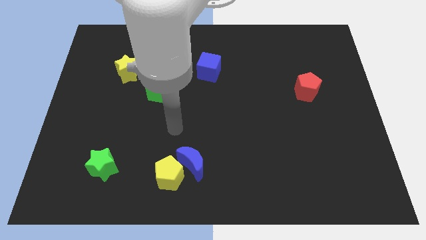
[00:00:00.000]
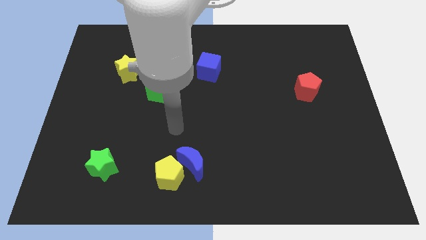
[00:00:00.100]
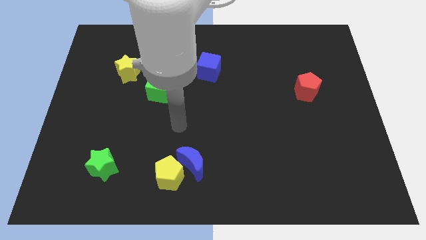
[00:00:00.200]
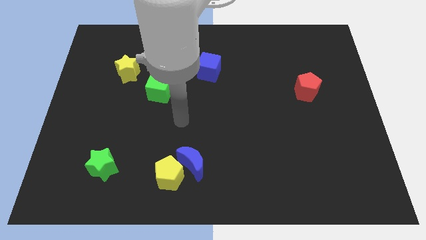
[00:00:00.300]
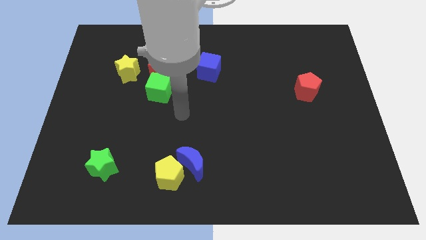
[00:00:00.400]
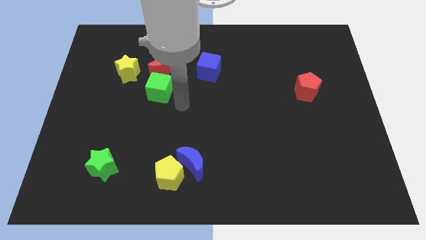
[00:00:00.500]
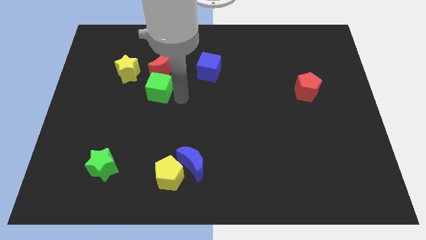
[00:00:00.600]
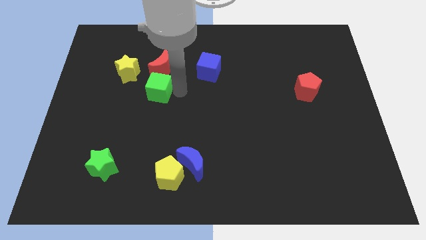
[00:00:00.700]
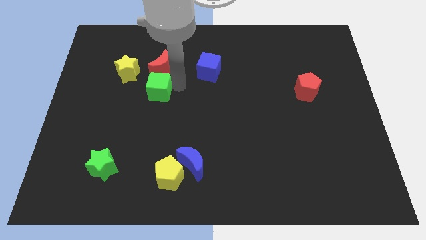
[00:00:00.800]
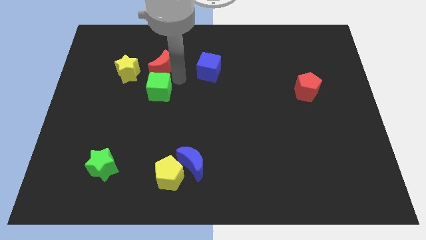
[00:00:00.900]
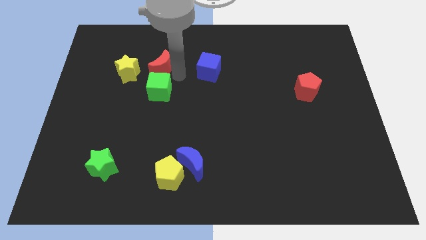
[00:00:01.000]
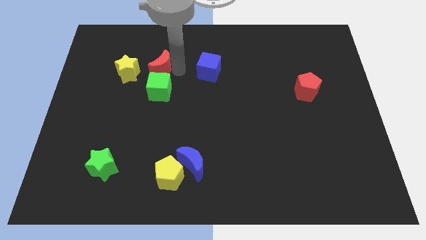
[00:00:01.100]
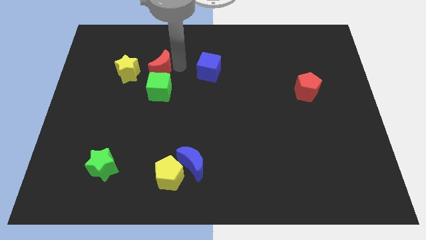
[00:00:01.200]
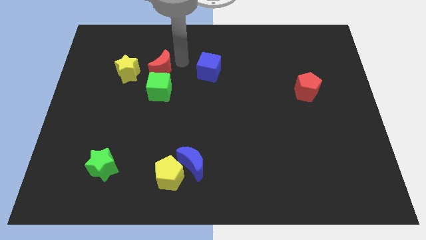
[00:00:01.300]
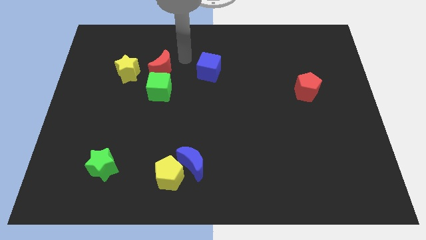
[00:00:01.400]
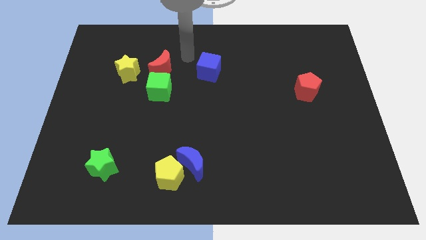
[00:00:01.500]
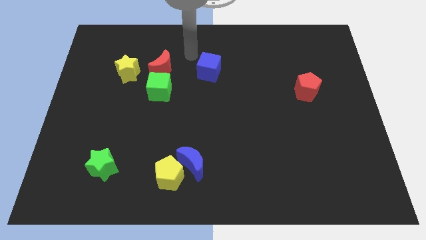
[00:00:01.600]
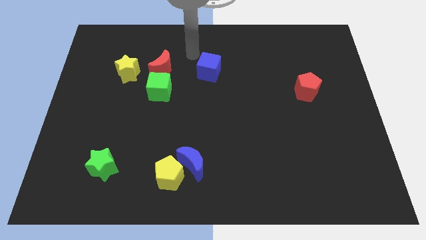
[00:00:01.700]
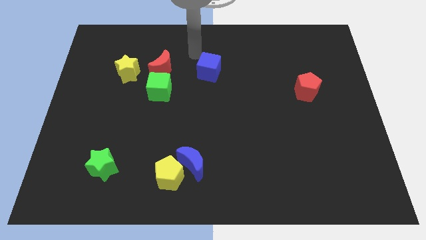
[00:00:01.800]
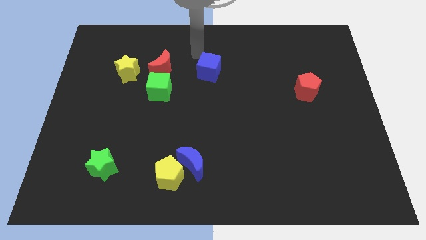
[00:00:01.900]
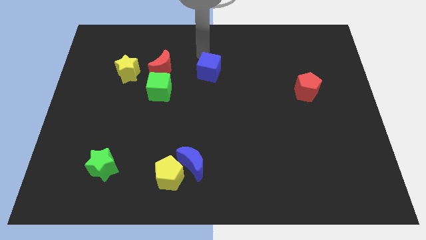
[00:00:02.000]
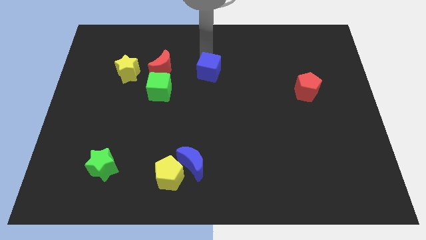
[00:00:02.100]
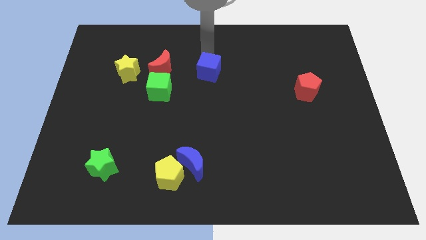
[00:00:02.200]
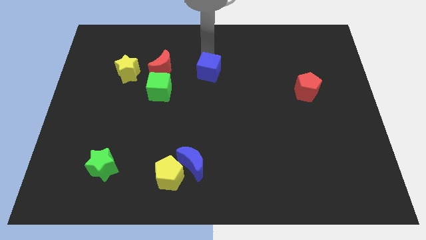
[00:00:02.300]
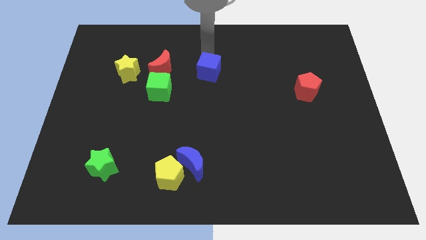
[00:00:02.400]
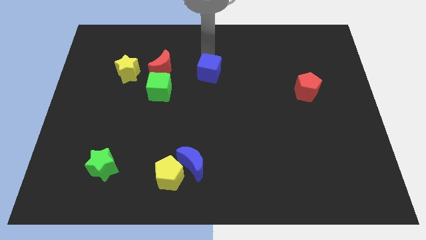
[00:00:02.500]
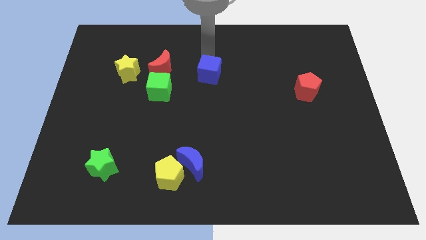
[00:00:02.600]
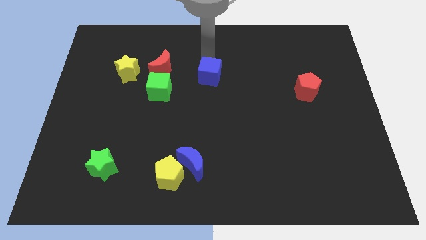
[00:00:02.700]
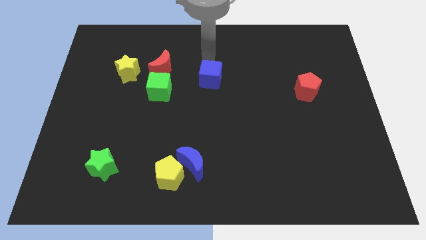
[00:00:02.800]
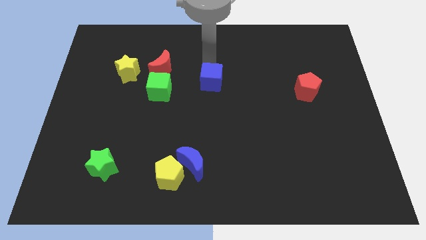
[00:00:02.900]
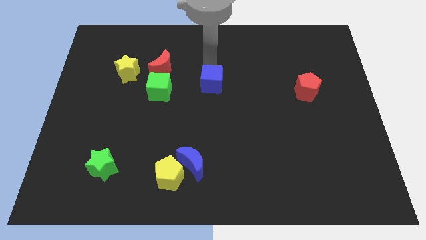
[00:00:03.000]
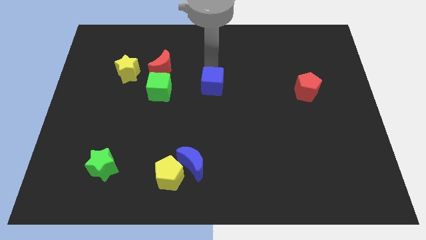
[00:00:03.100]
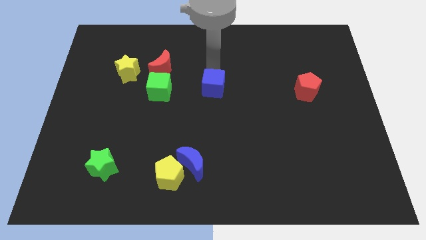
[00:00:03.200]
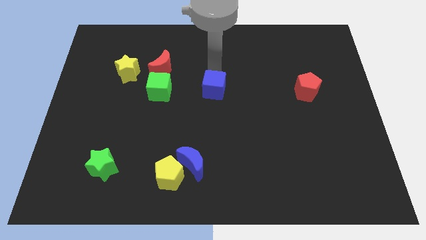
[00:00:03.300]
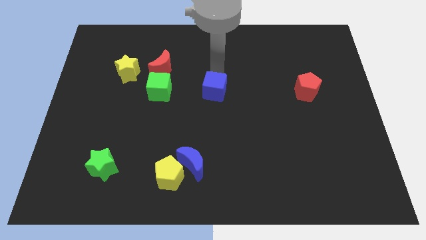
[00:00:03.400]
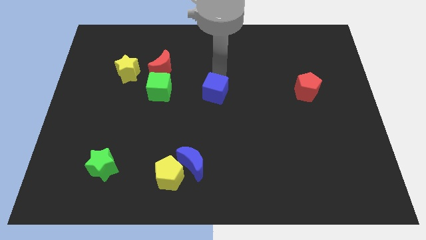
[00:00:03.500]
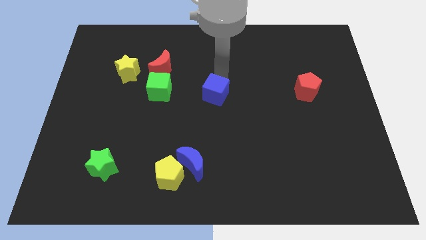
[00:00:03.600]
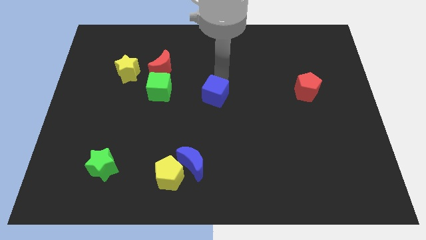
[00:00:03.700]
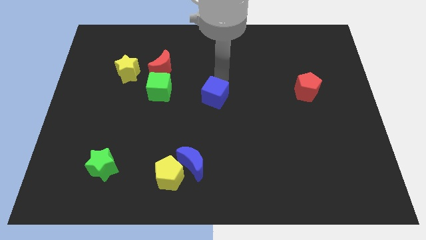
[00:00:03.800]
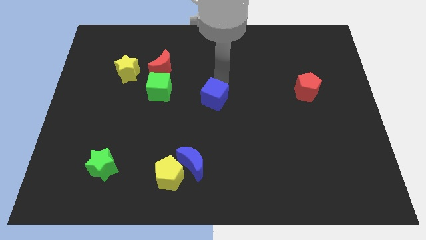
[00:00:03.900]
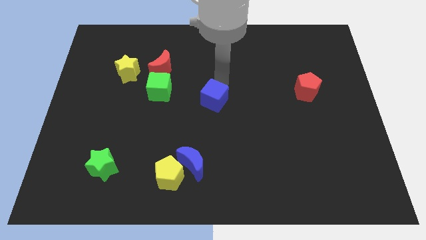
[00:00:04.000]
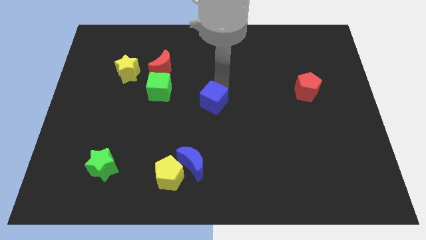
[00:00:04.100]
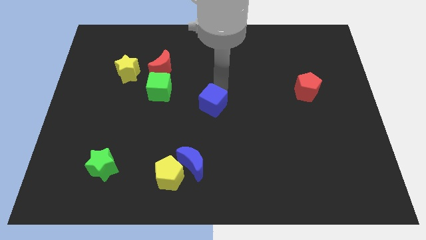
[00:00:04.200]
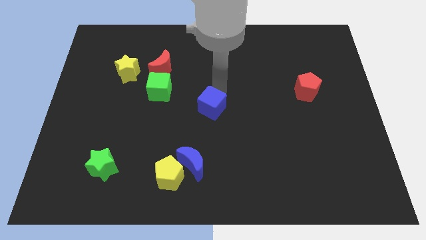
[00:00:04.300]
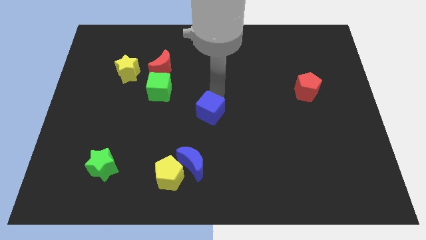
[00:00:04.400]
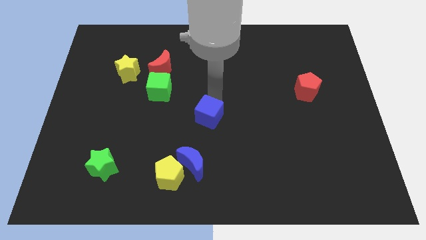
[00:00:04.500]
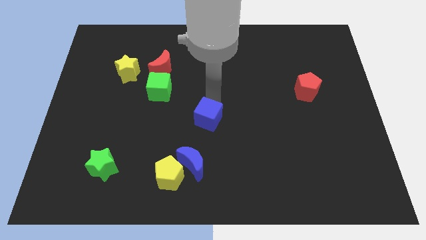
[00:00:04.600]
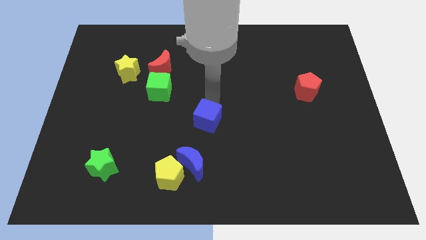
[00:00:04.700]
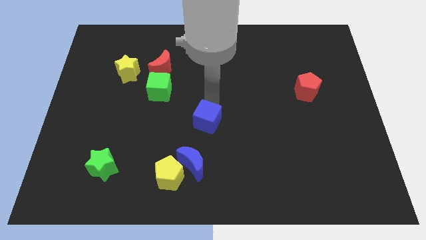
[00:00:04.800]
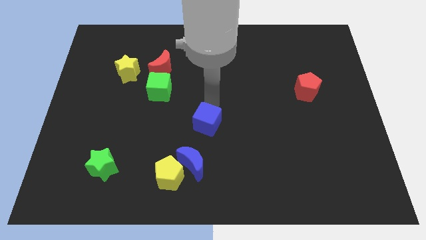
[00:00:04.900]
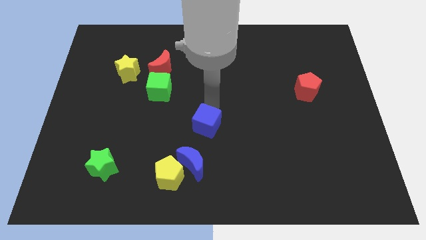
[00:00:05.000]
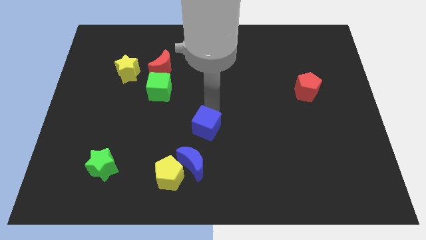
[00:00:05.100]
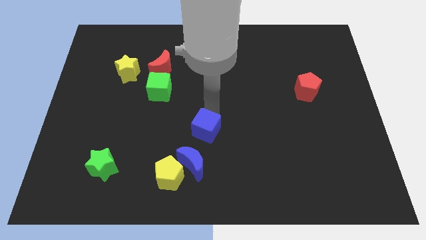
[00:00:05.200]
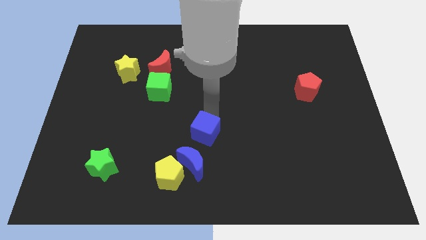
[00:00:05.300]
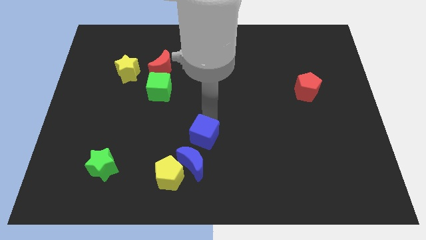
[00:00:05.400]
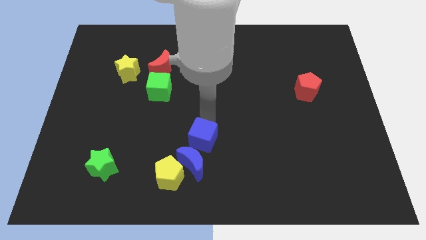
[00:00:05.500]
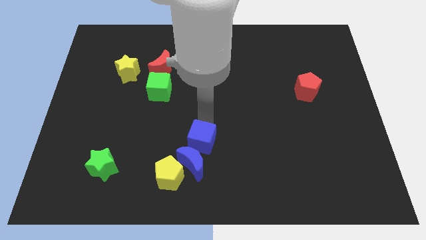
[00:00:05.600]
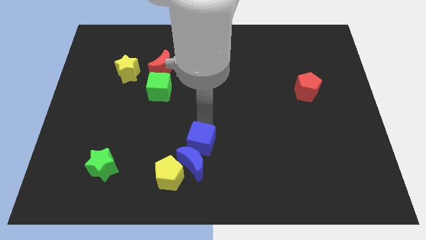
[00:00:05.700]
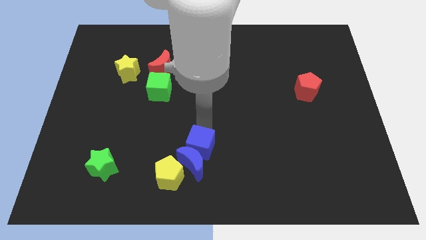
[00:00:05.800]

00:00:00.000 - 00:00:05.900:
move the blue cube close to the blue moon

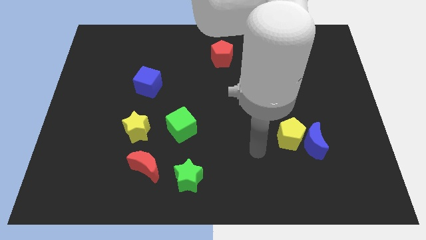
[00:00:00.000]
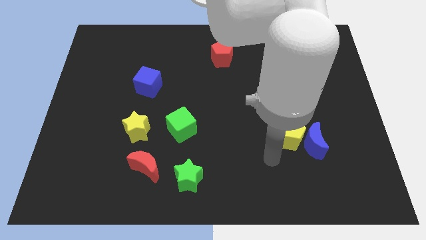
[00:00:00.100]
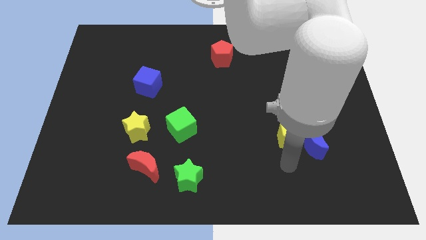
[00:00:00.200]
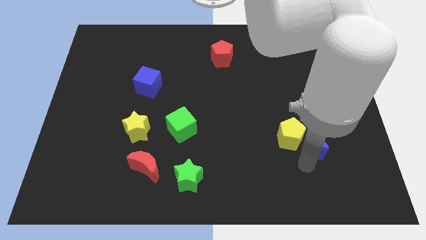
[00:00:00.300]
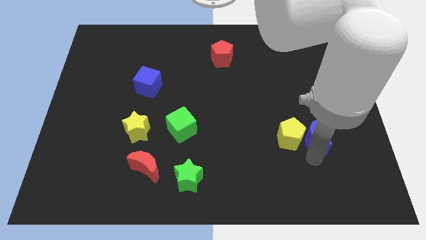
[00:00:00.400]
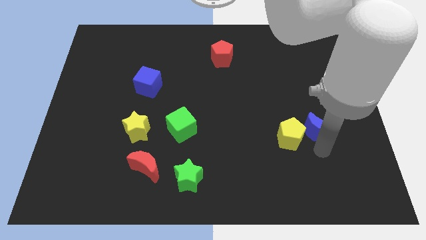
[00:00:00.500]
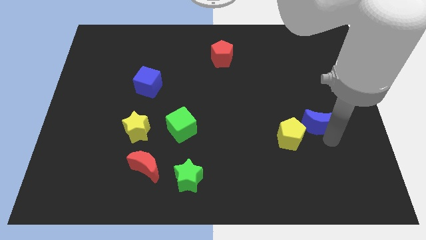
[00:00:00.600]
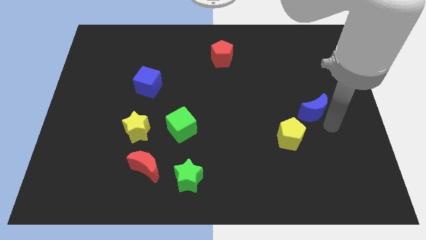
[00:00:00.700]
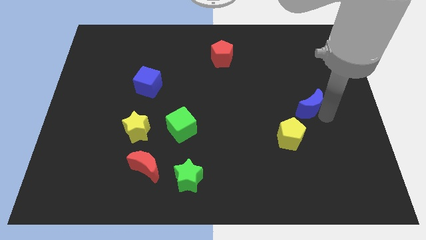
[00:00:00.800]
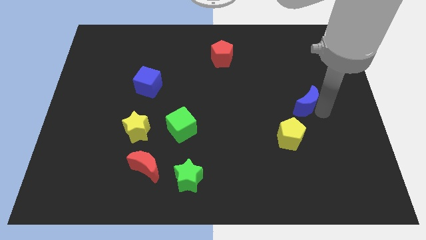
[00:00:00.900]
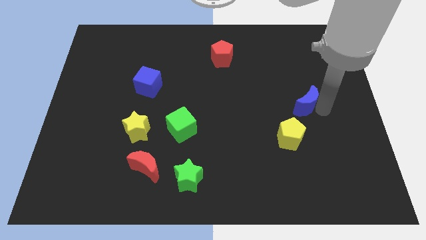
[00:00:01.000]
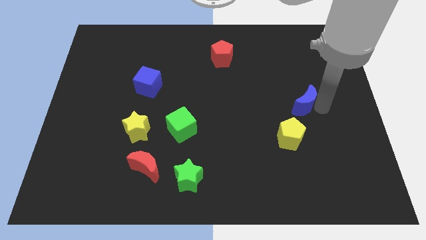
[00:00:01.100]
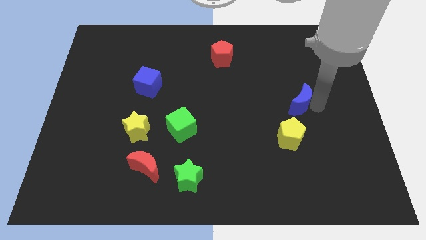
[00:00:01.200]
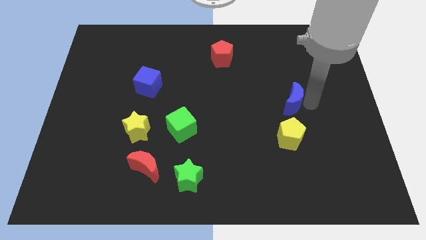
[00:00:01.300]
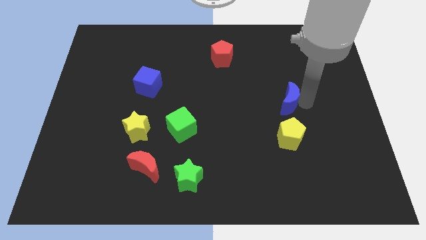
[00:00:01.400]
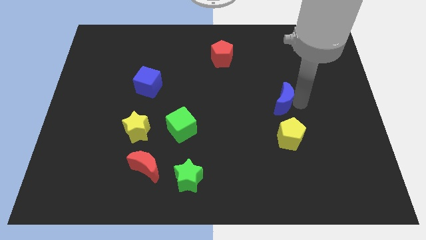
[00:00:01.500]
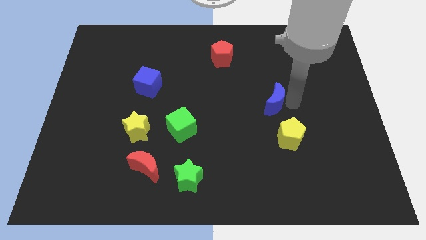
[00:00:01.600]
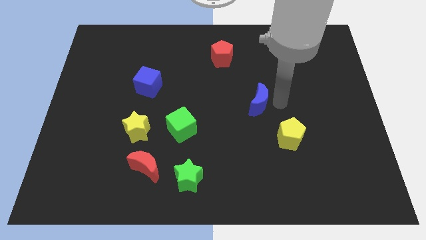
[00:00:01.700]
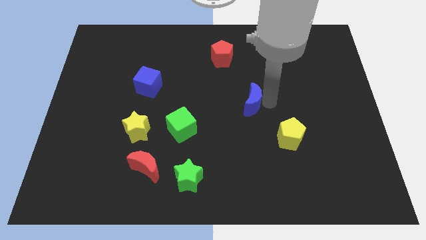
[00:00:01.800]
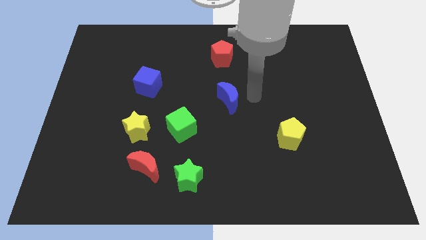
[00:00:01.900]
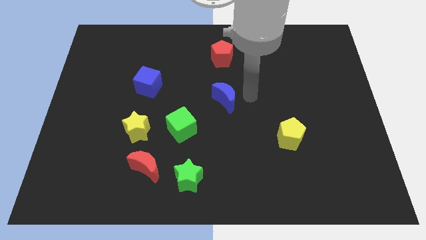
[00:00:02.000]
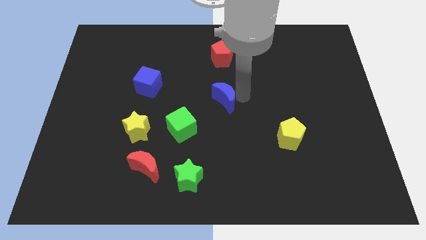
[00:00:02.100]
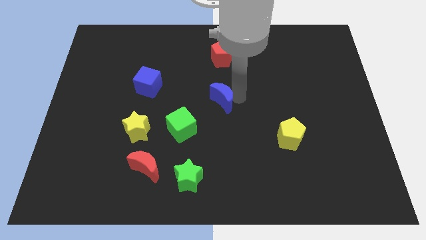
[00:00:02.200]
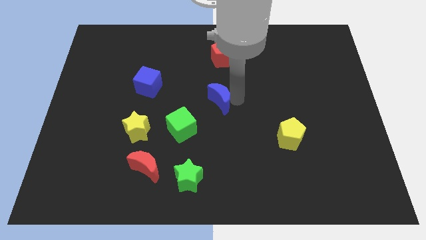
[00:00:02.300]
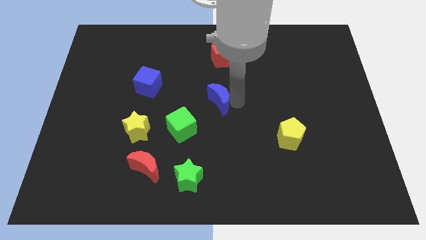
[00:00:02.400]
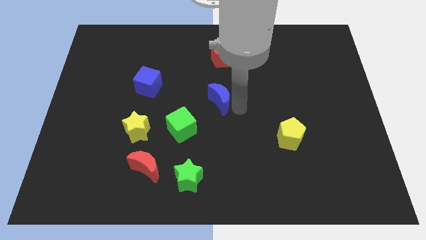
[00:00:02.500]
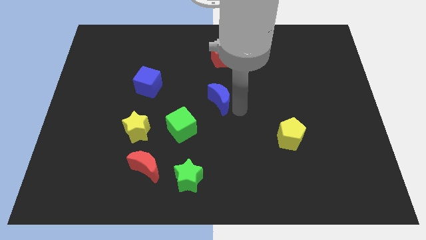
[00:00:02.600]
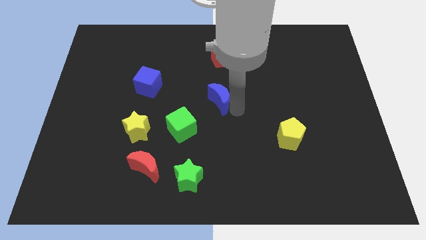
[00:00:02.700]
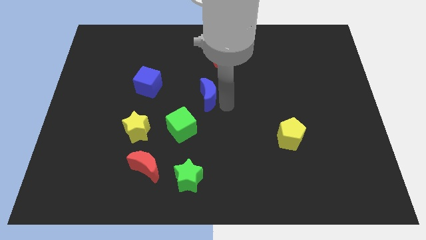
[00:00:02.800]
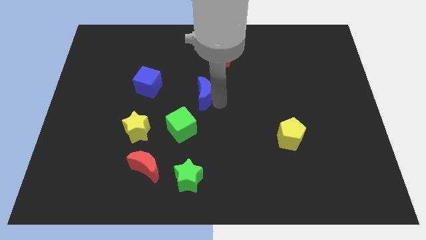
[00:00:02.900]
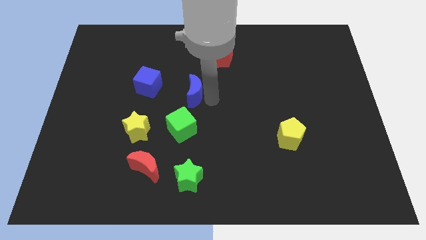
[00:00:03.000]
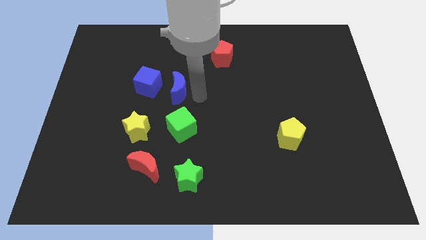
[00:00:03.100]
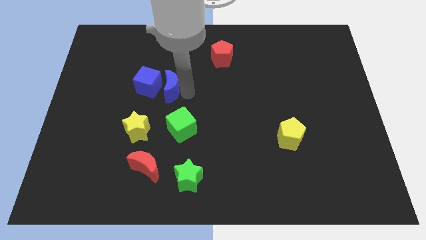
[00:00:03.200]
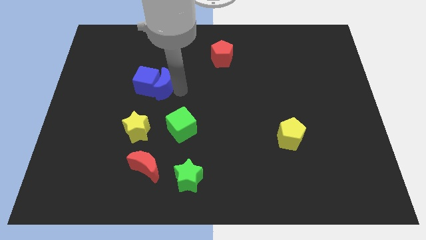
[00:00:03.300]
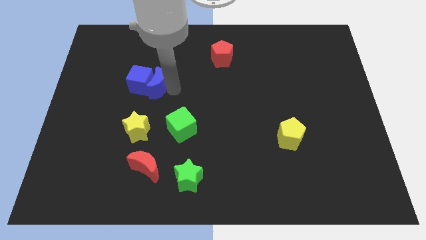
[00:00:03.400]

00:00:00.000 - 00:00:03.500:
move the blue moon next to the blue cube
